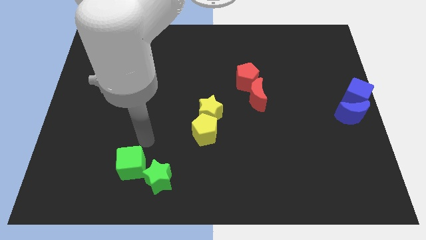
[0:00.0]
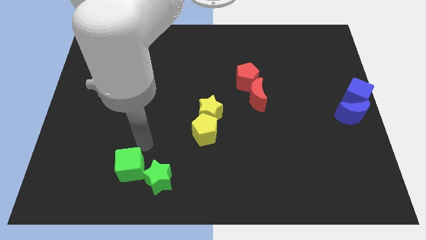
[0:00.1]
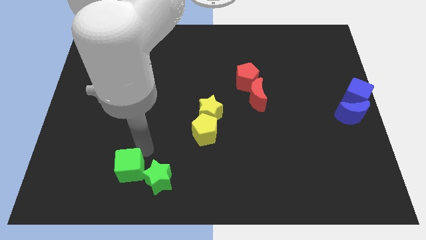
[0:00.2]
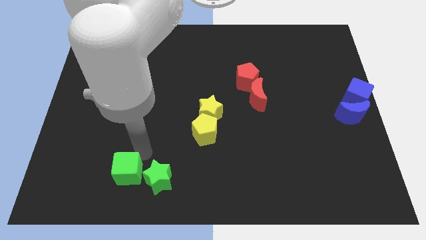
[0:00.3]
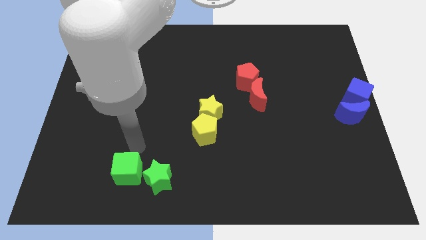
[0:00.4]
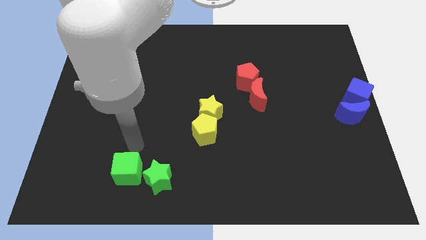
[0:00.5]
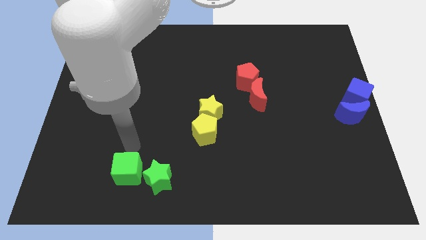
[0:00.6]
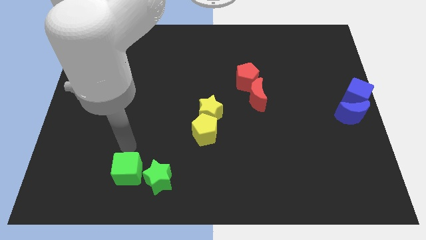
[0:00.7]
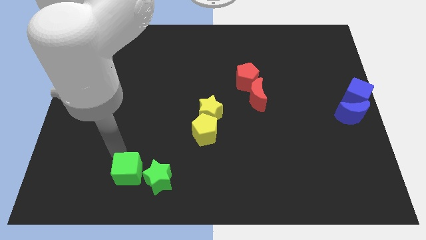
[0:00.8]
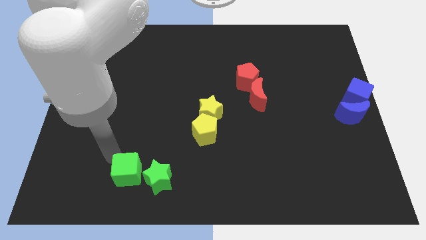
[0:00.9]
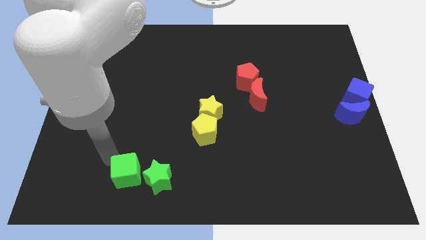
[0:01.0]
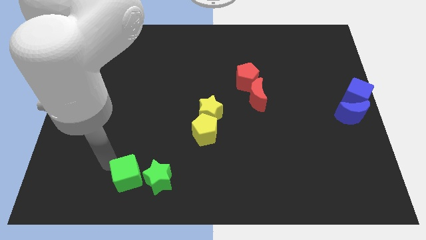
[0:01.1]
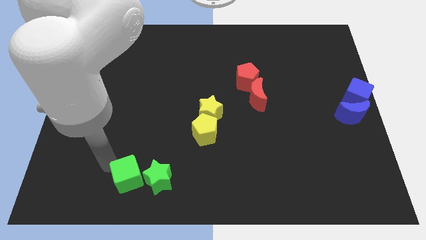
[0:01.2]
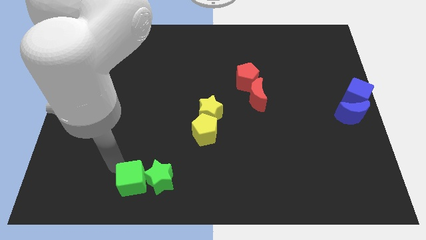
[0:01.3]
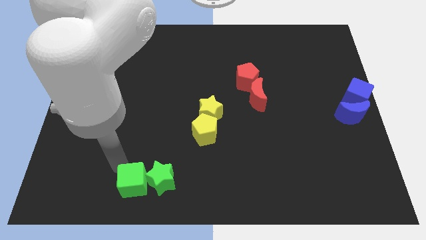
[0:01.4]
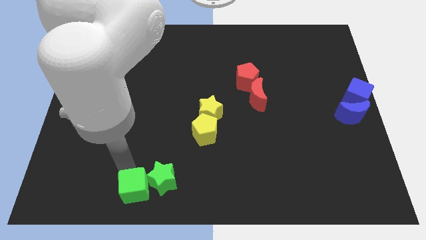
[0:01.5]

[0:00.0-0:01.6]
place the green cube left to the green star

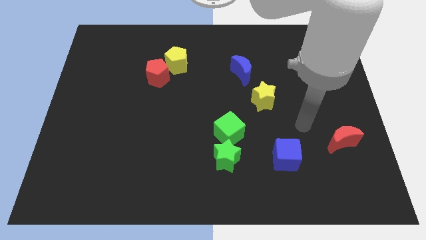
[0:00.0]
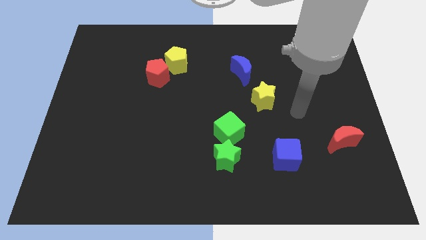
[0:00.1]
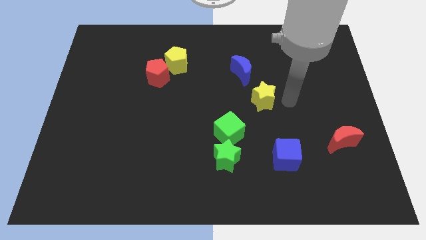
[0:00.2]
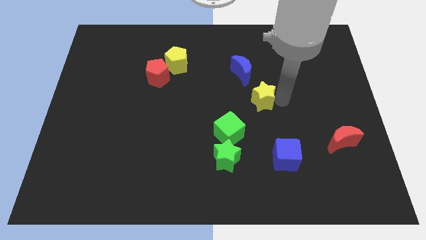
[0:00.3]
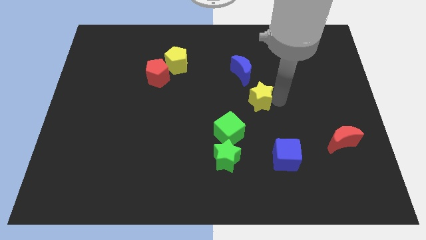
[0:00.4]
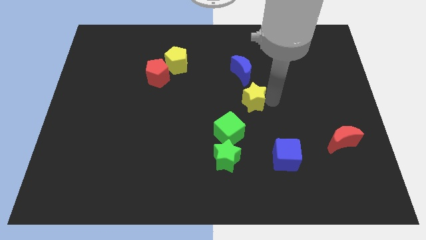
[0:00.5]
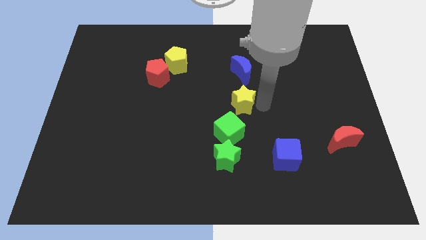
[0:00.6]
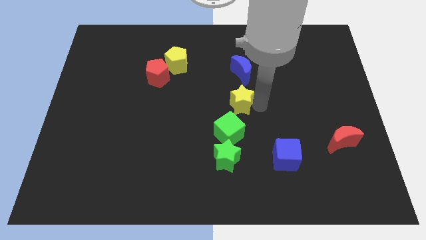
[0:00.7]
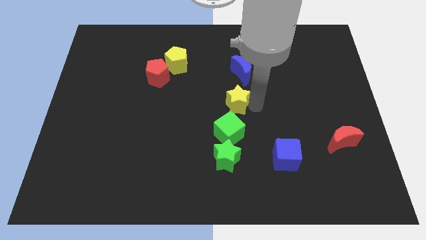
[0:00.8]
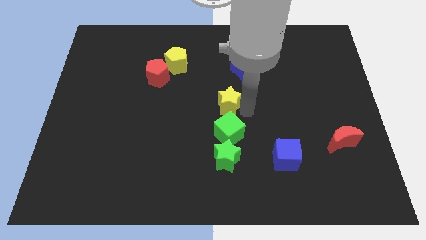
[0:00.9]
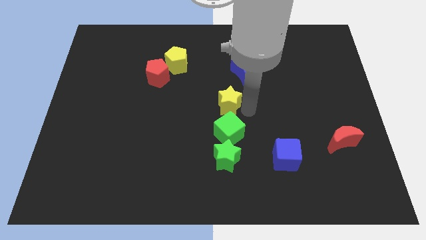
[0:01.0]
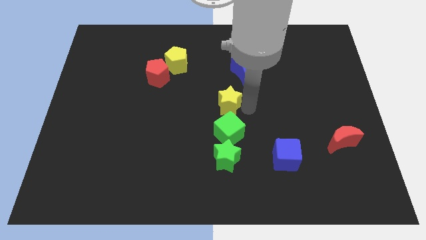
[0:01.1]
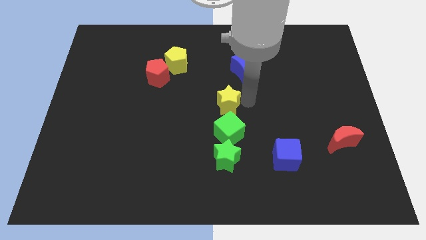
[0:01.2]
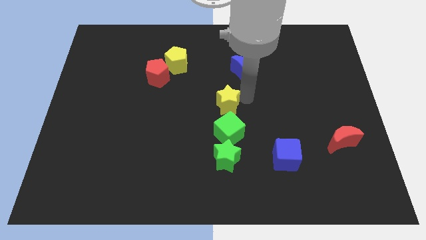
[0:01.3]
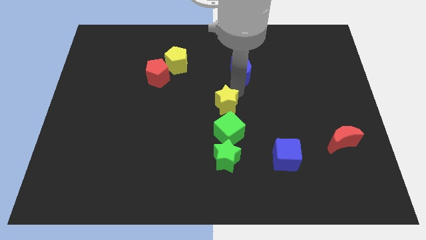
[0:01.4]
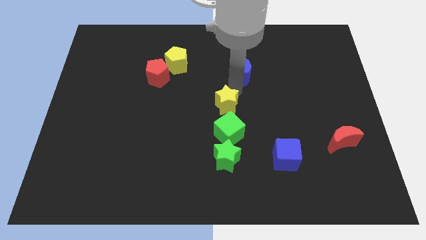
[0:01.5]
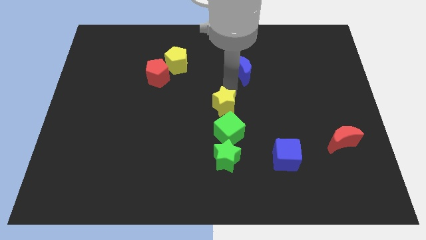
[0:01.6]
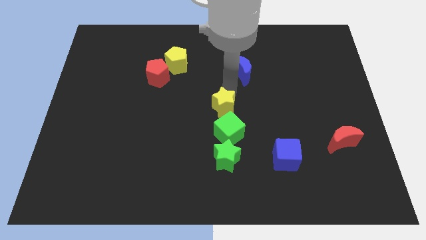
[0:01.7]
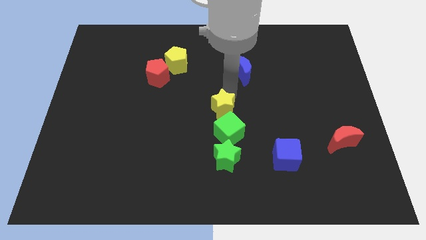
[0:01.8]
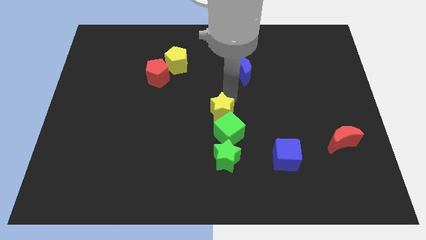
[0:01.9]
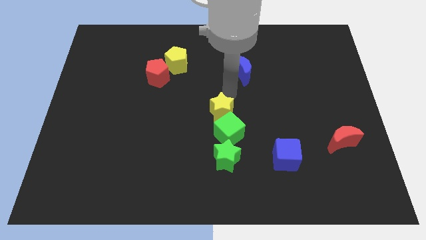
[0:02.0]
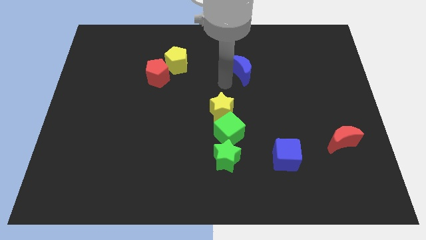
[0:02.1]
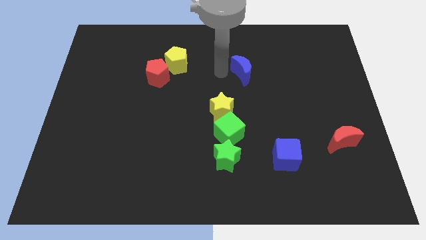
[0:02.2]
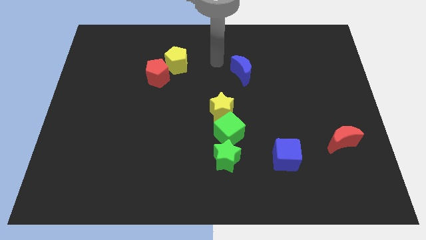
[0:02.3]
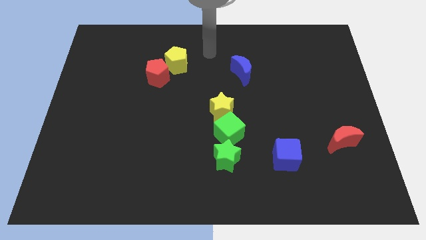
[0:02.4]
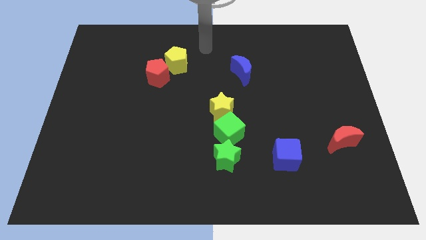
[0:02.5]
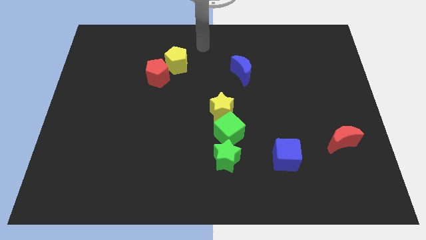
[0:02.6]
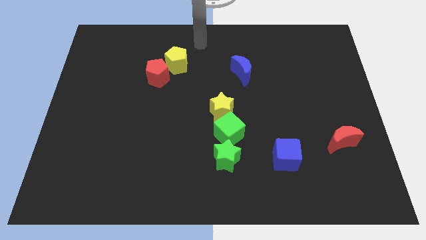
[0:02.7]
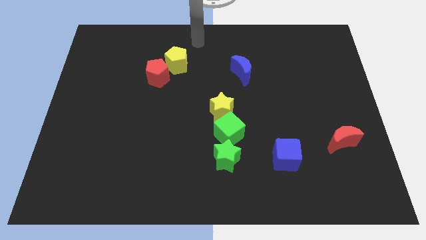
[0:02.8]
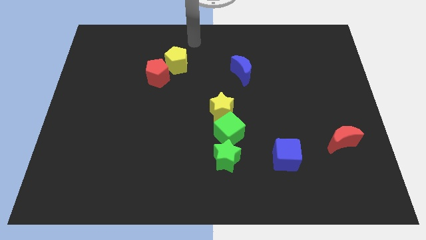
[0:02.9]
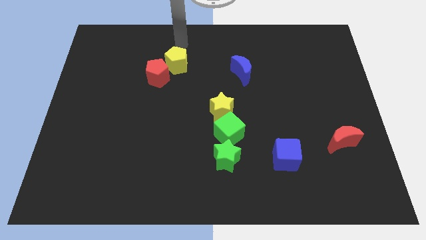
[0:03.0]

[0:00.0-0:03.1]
put yellow star above green cube

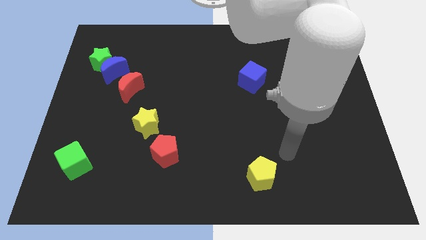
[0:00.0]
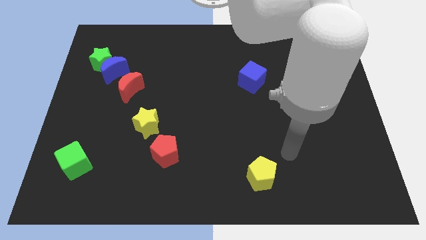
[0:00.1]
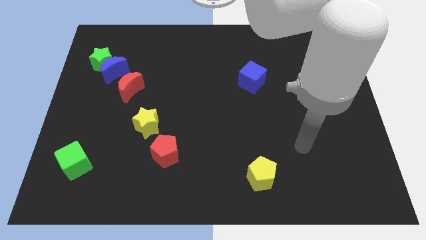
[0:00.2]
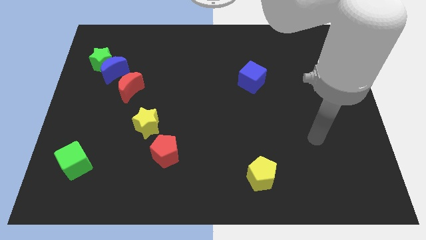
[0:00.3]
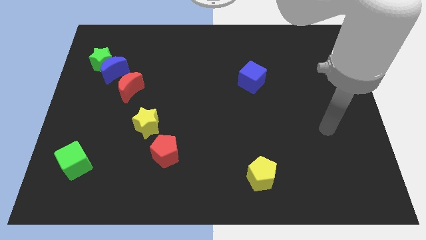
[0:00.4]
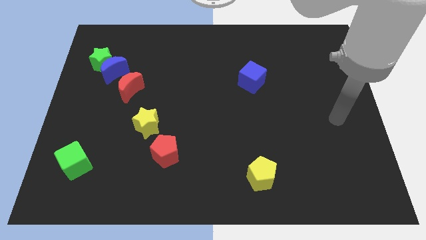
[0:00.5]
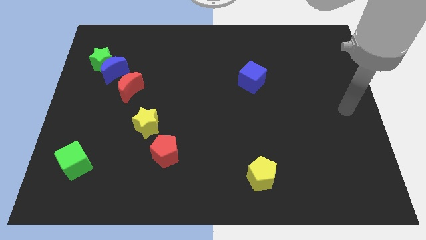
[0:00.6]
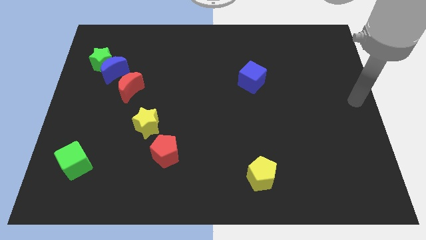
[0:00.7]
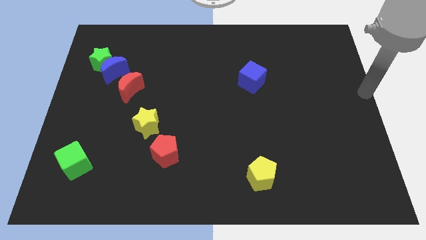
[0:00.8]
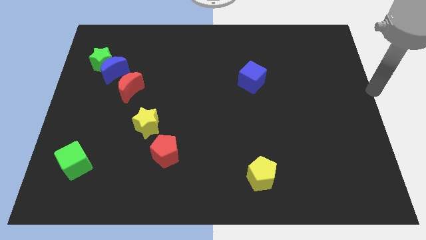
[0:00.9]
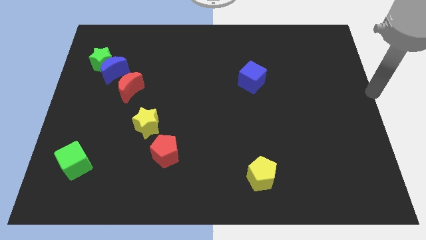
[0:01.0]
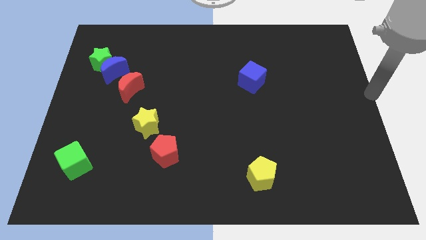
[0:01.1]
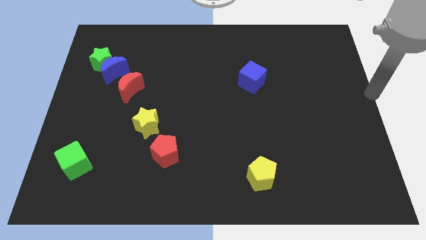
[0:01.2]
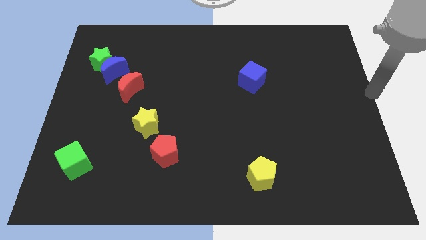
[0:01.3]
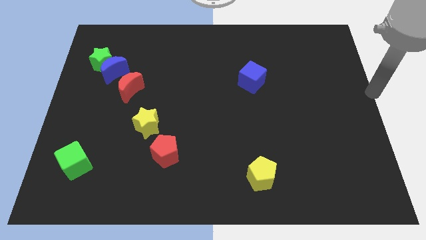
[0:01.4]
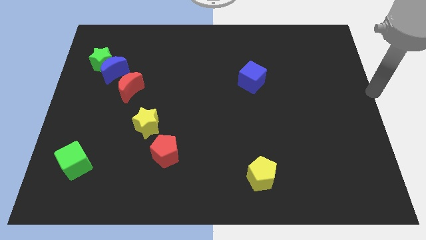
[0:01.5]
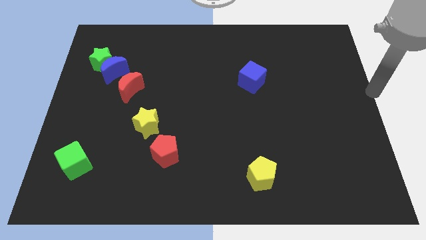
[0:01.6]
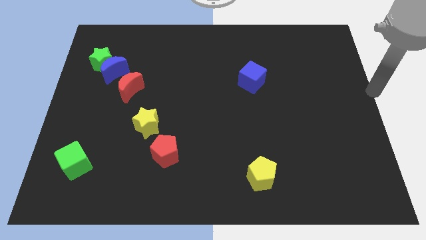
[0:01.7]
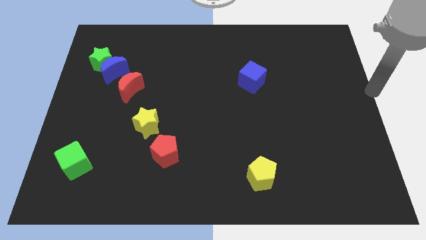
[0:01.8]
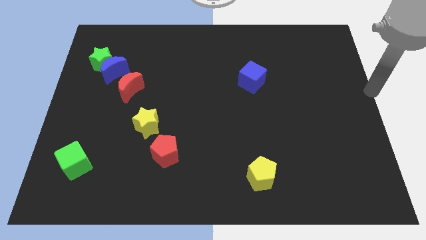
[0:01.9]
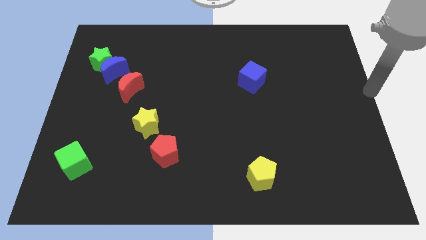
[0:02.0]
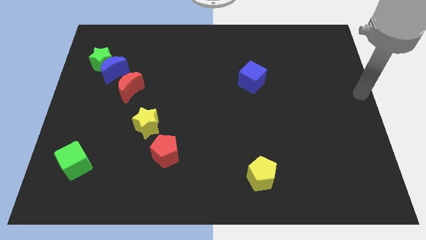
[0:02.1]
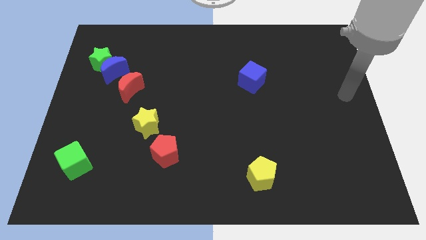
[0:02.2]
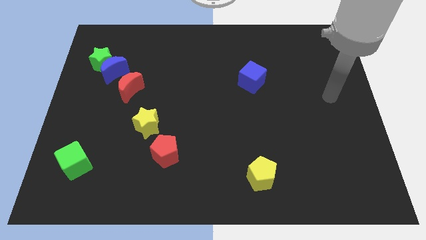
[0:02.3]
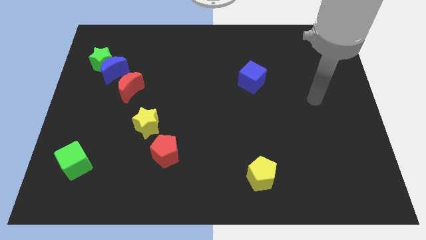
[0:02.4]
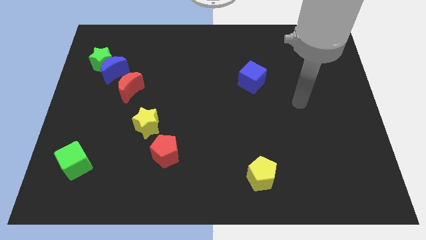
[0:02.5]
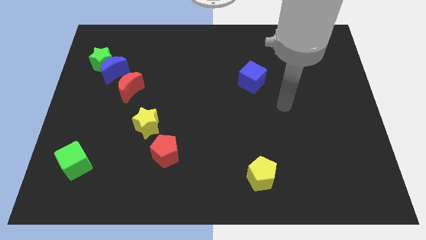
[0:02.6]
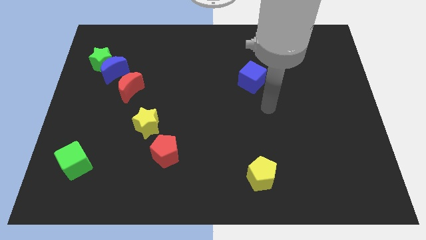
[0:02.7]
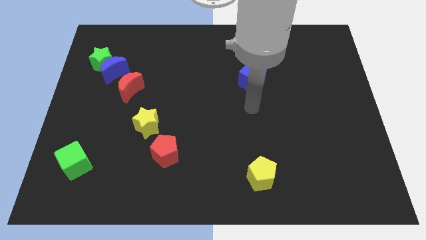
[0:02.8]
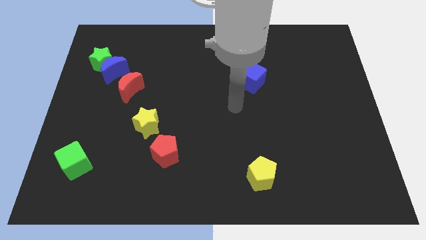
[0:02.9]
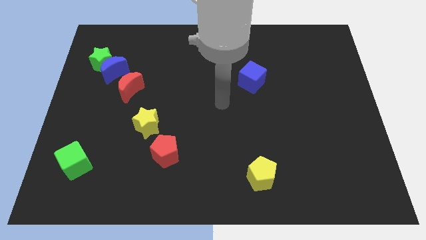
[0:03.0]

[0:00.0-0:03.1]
move the arm towards the center of the board

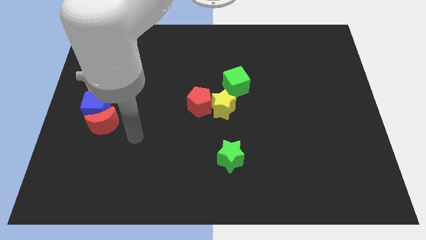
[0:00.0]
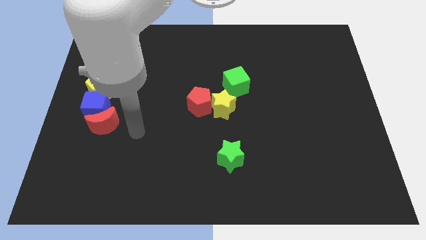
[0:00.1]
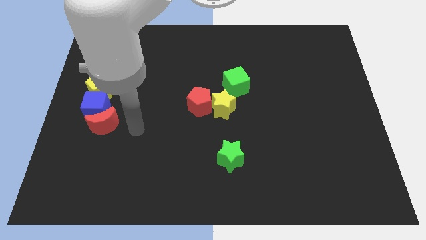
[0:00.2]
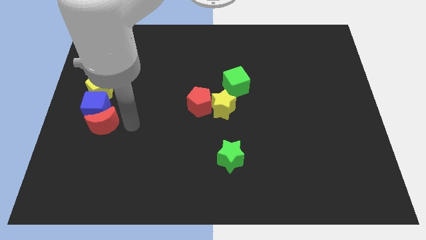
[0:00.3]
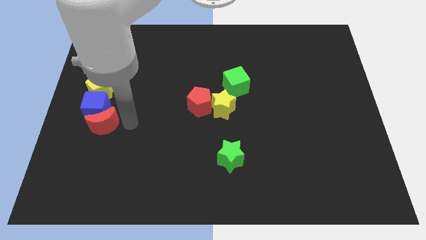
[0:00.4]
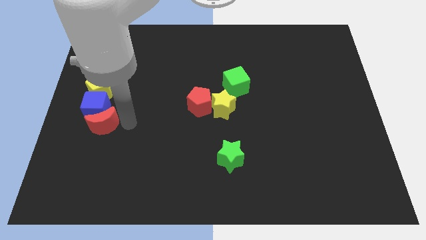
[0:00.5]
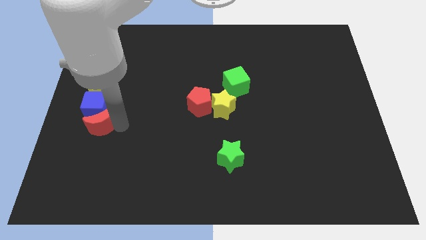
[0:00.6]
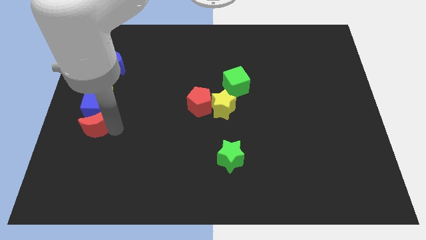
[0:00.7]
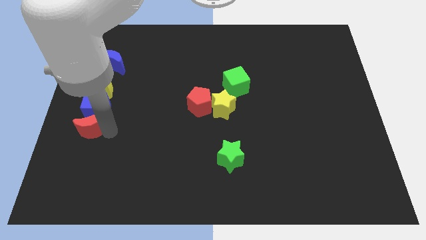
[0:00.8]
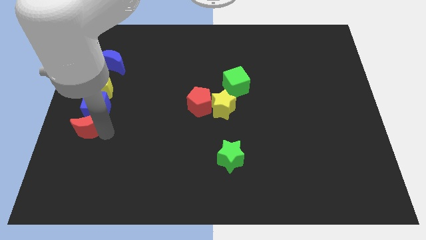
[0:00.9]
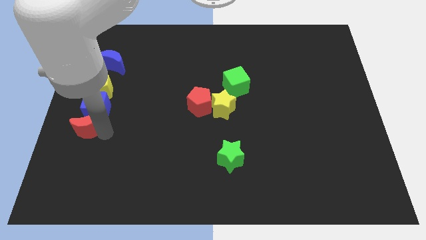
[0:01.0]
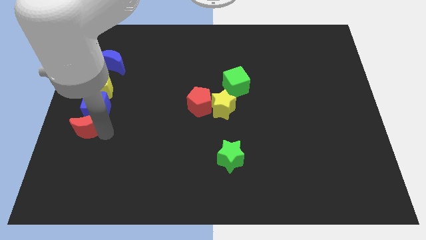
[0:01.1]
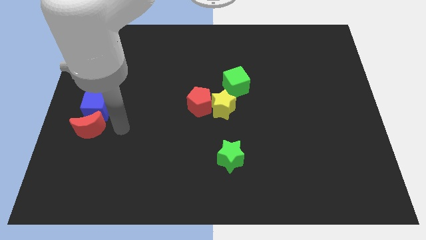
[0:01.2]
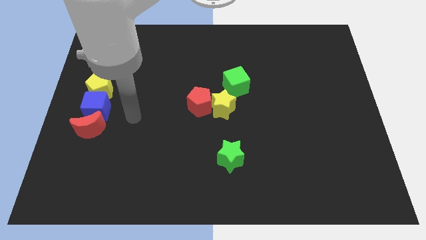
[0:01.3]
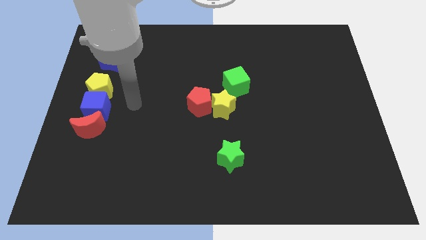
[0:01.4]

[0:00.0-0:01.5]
push the red pentagon to the bottom of the blue cube
